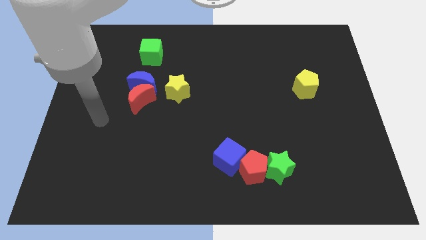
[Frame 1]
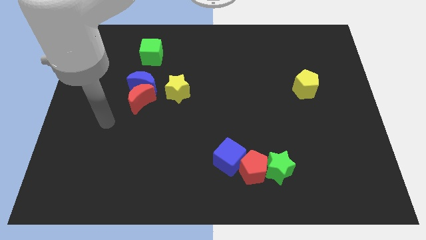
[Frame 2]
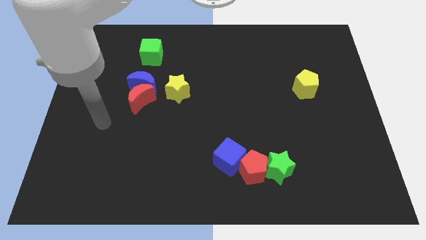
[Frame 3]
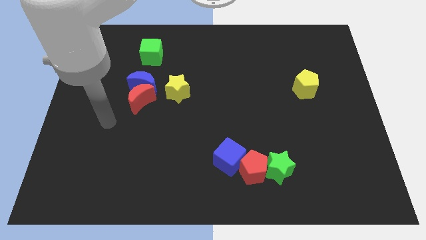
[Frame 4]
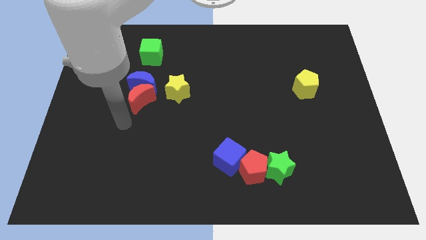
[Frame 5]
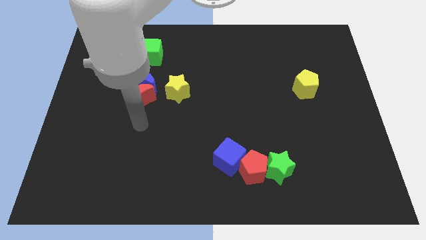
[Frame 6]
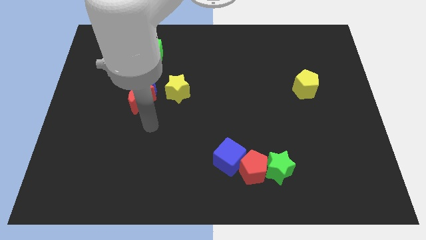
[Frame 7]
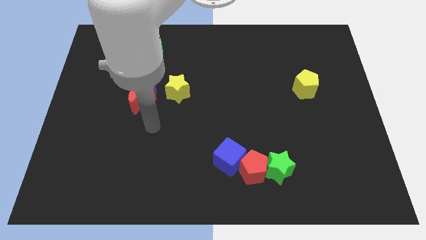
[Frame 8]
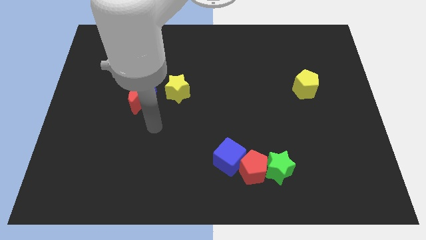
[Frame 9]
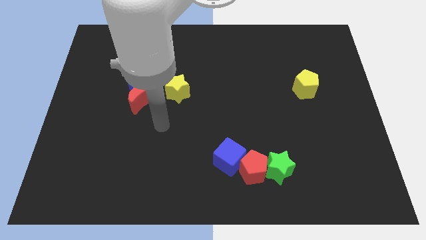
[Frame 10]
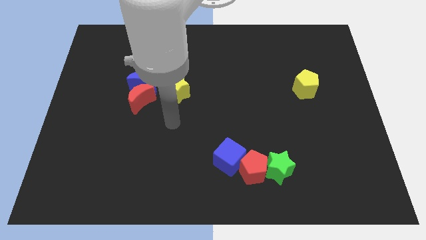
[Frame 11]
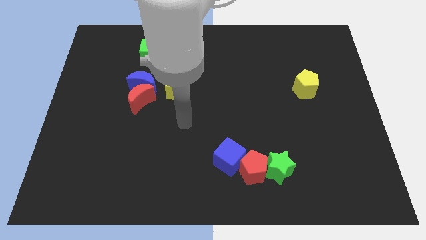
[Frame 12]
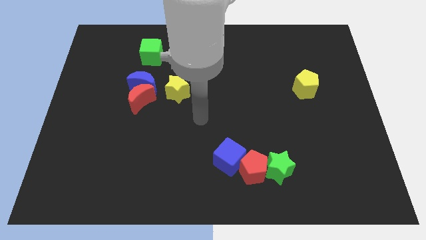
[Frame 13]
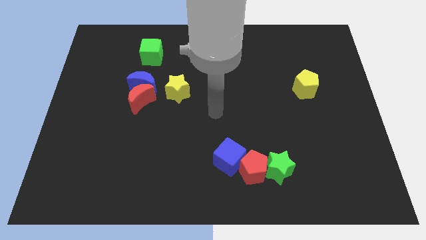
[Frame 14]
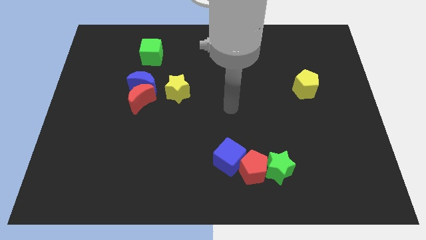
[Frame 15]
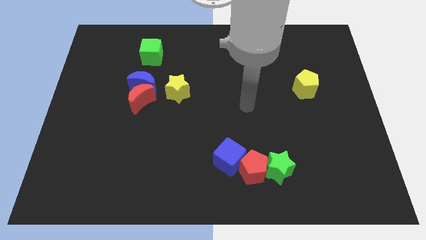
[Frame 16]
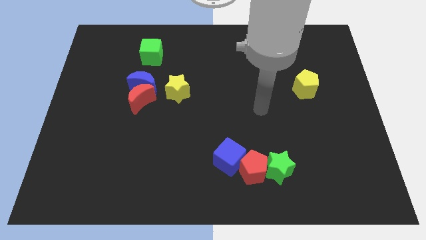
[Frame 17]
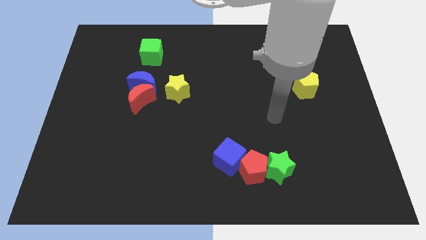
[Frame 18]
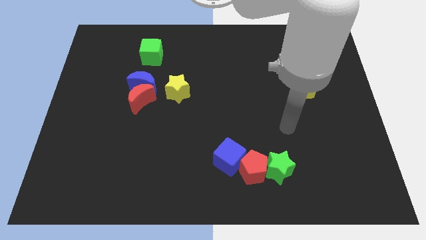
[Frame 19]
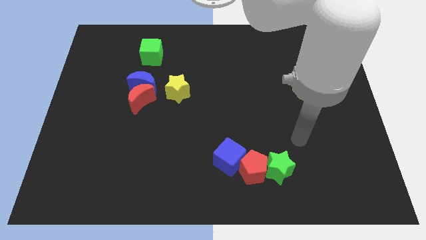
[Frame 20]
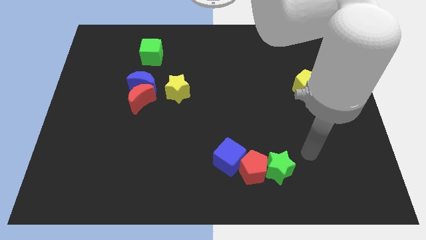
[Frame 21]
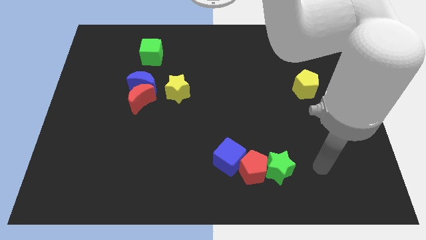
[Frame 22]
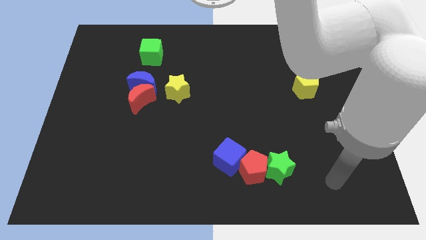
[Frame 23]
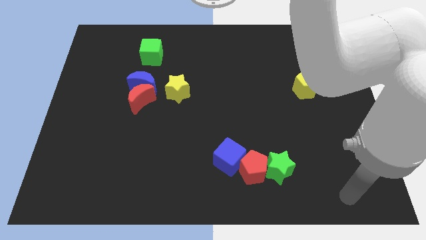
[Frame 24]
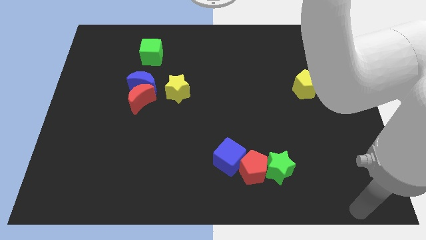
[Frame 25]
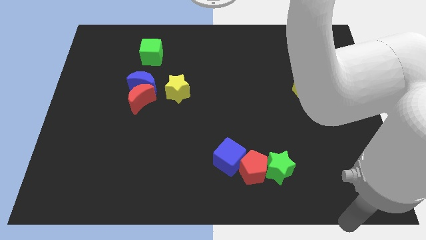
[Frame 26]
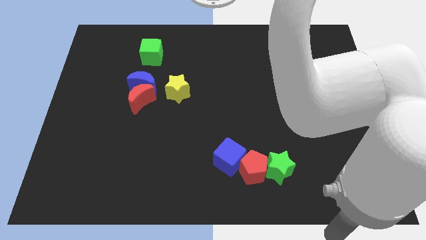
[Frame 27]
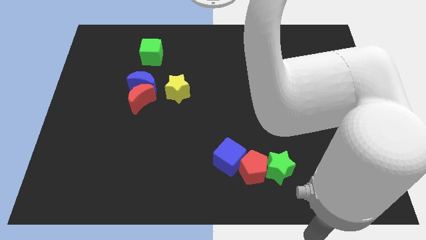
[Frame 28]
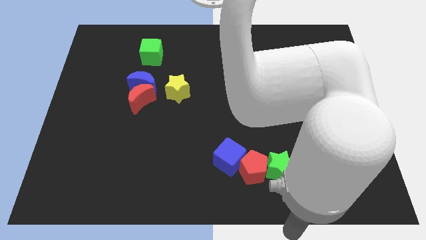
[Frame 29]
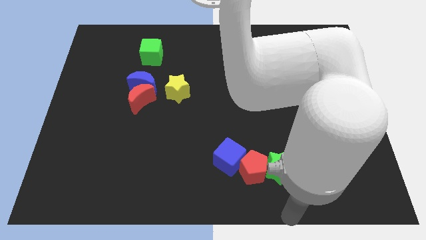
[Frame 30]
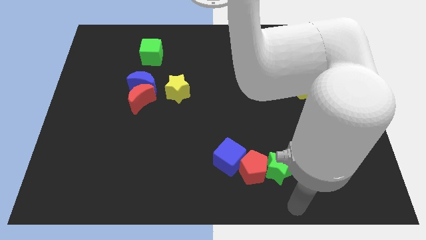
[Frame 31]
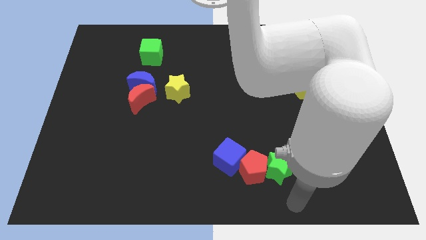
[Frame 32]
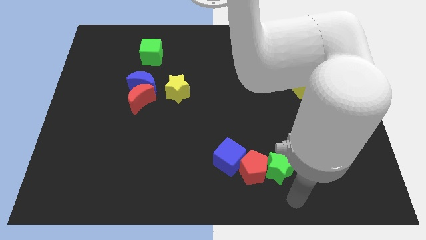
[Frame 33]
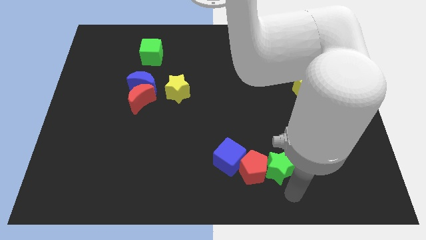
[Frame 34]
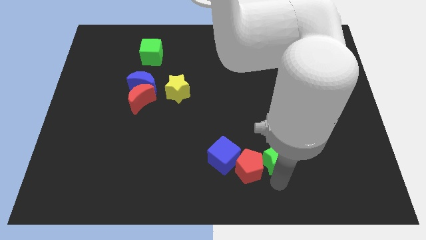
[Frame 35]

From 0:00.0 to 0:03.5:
move your arm below the green star

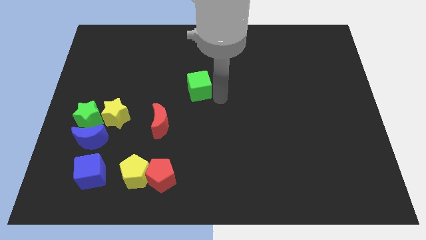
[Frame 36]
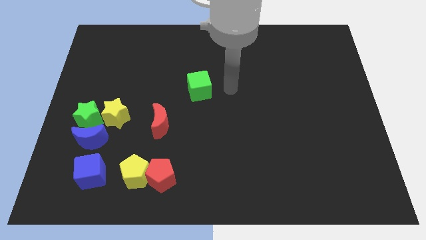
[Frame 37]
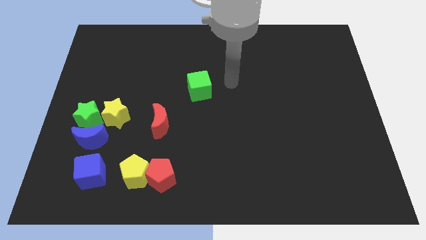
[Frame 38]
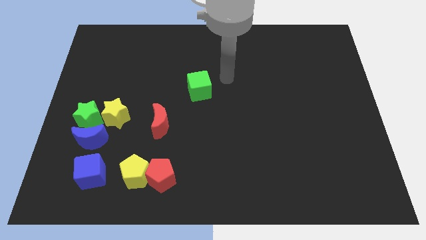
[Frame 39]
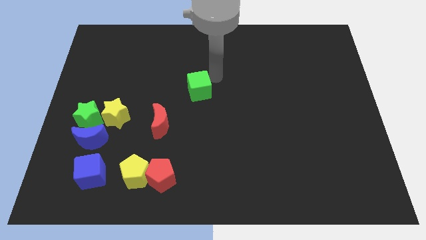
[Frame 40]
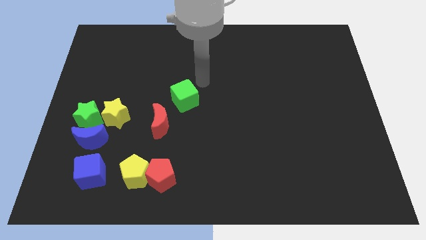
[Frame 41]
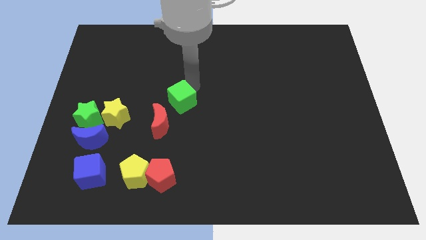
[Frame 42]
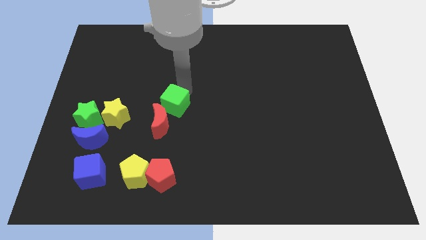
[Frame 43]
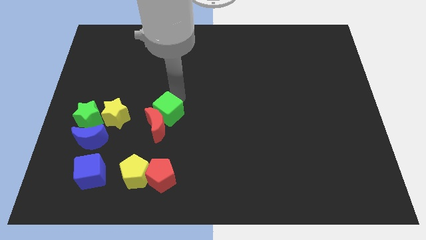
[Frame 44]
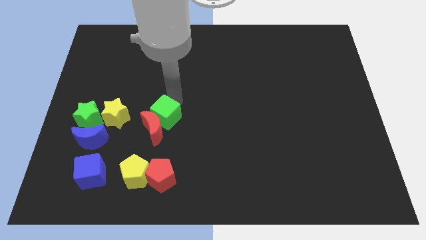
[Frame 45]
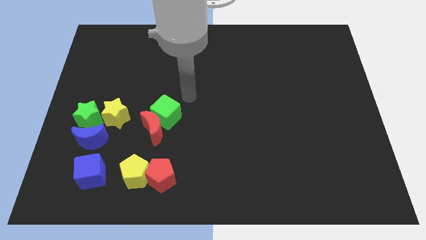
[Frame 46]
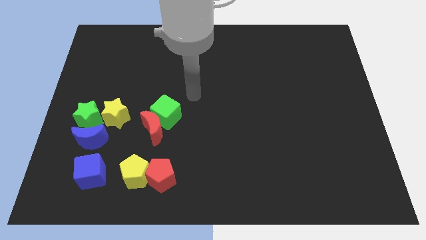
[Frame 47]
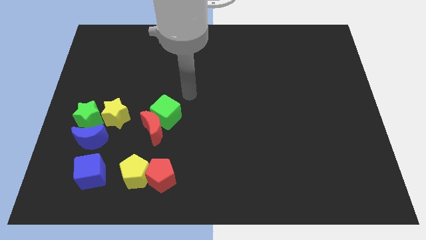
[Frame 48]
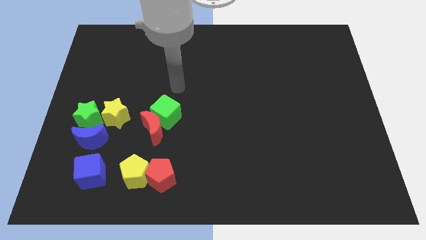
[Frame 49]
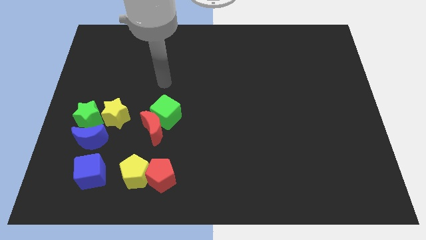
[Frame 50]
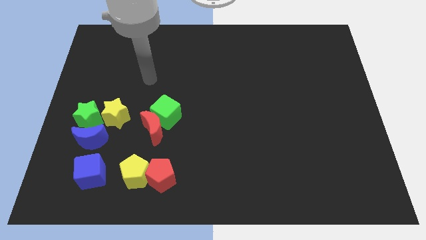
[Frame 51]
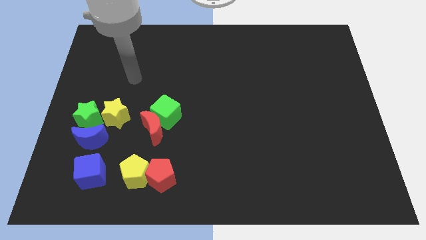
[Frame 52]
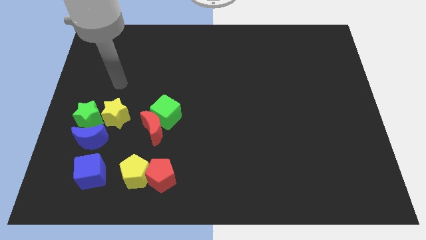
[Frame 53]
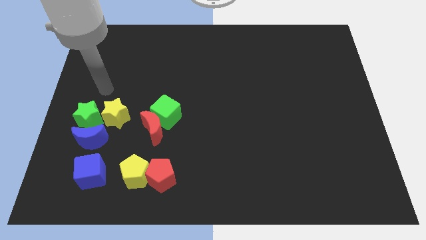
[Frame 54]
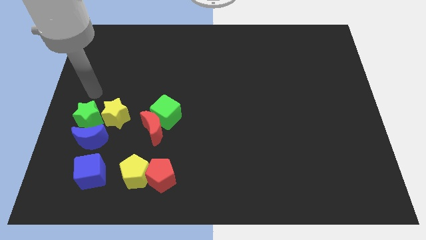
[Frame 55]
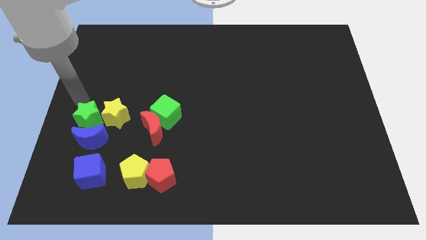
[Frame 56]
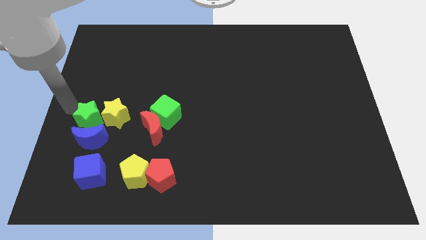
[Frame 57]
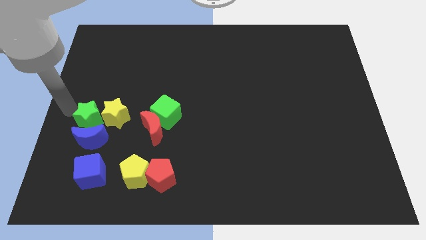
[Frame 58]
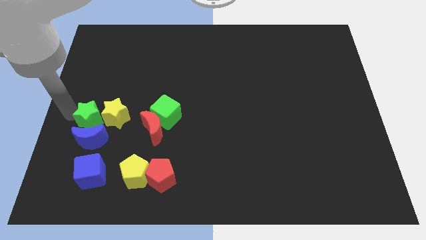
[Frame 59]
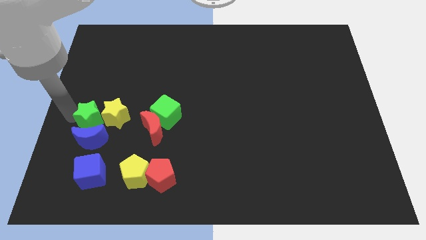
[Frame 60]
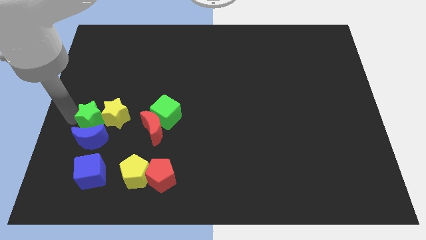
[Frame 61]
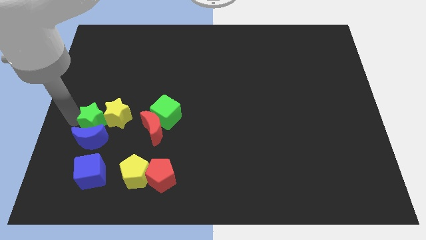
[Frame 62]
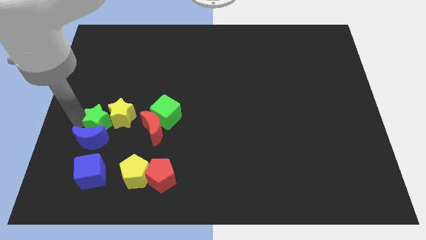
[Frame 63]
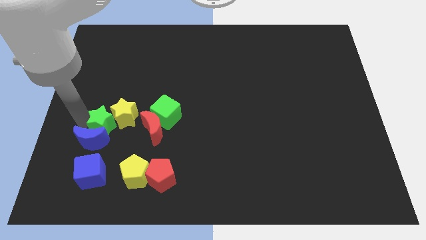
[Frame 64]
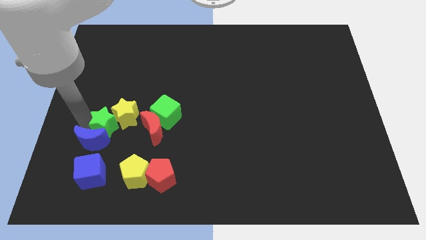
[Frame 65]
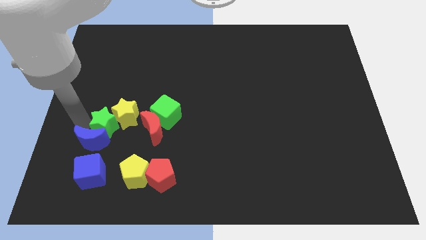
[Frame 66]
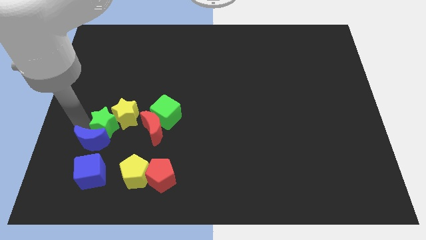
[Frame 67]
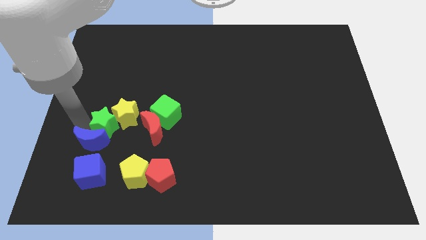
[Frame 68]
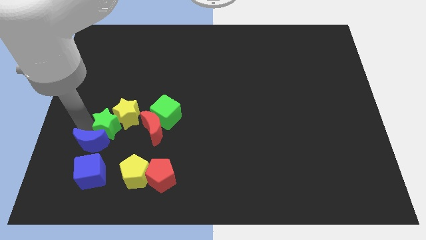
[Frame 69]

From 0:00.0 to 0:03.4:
push the green star and the green cube into the group of blocks

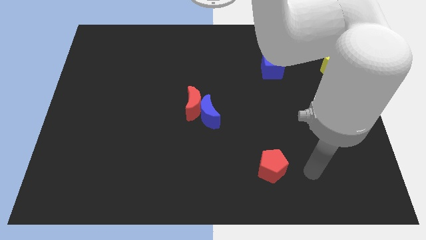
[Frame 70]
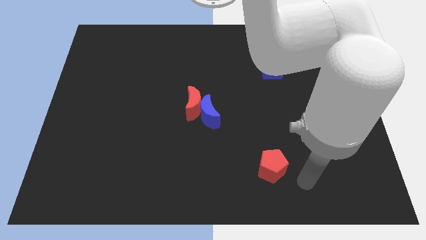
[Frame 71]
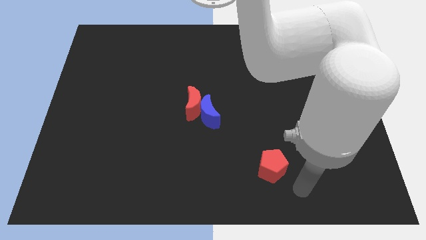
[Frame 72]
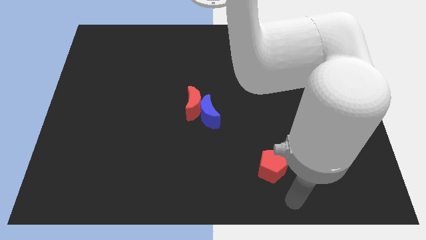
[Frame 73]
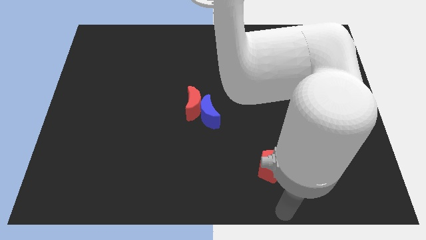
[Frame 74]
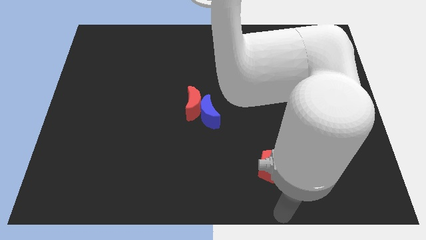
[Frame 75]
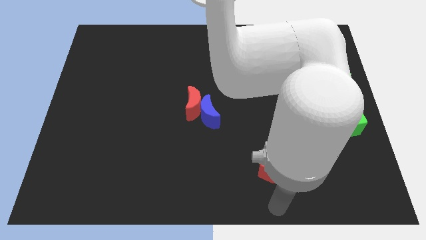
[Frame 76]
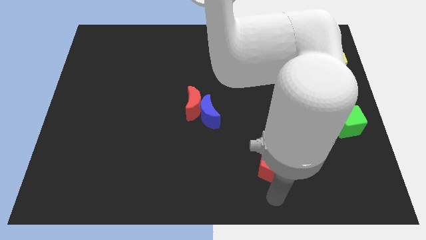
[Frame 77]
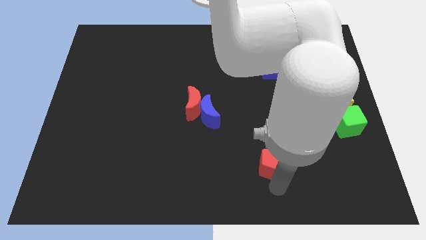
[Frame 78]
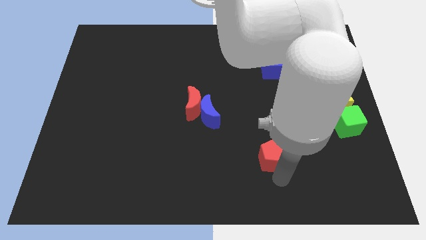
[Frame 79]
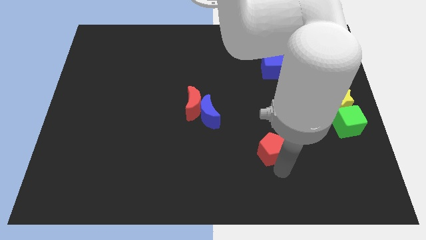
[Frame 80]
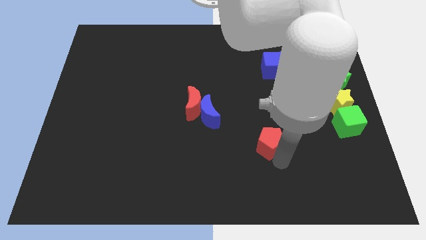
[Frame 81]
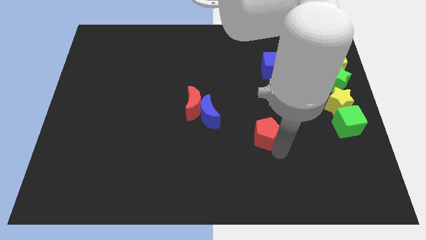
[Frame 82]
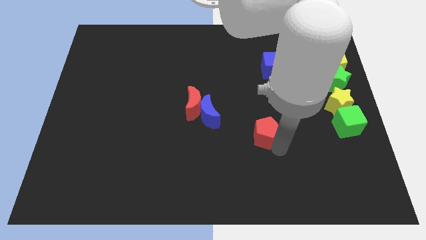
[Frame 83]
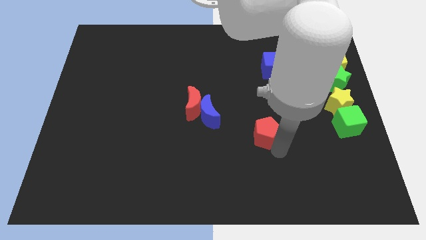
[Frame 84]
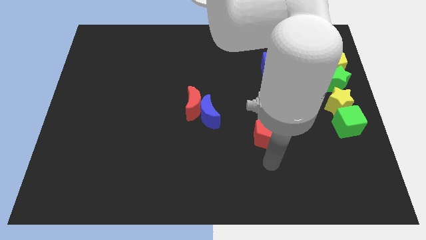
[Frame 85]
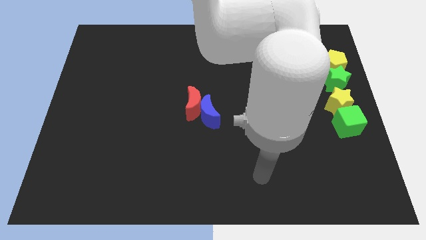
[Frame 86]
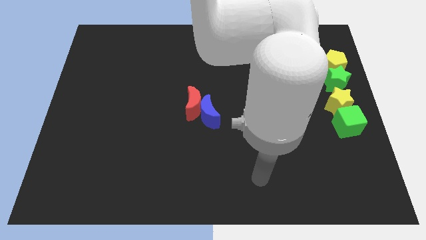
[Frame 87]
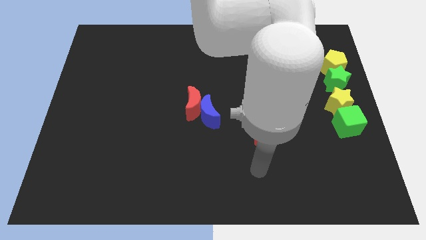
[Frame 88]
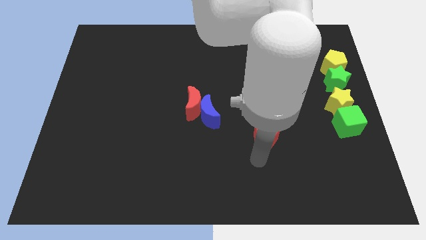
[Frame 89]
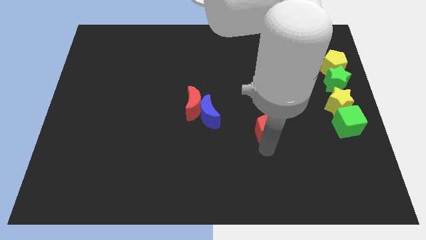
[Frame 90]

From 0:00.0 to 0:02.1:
push the red pentagon towards up
